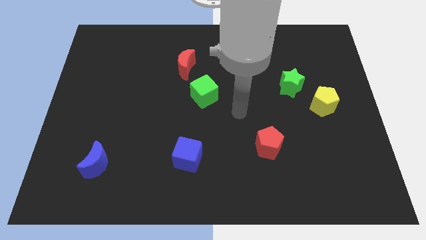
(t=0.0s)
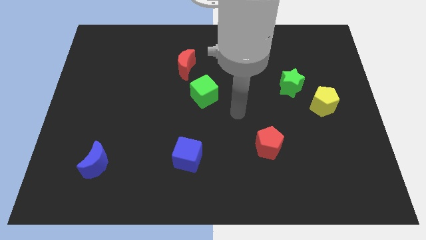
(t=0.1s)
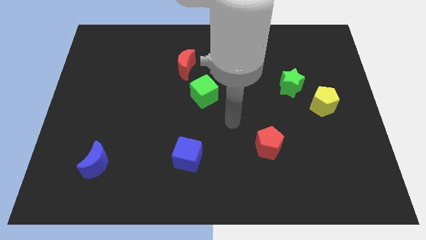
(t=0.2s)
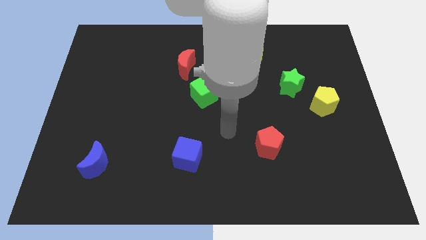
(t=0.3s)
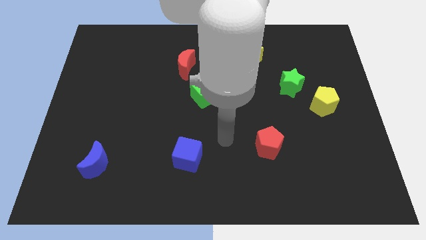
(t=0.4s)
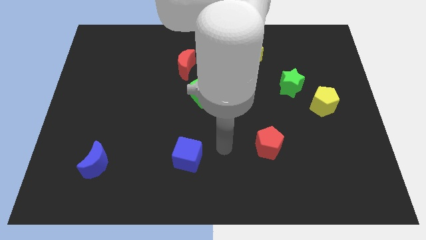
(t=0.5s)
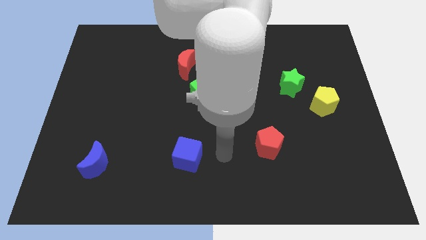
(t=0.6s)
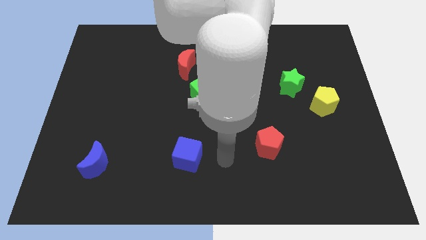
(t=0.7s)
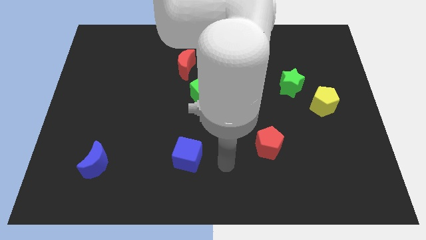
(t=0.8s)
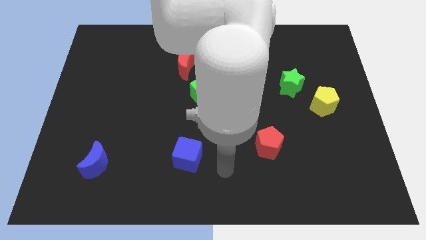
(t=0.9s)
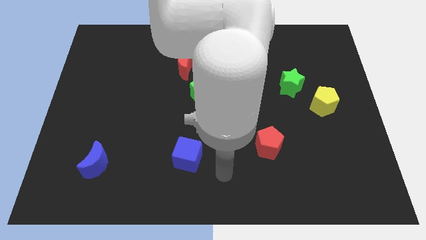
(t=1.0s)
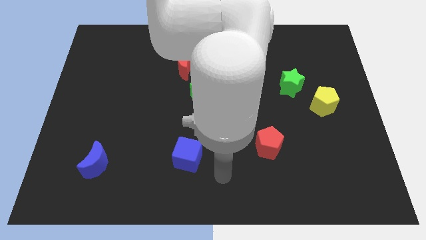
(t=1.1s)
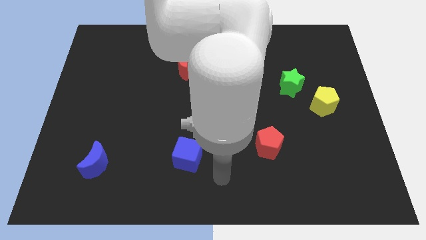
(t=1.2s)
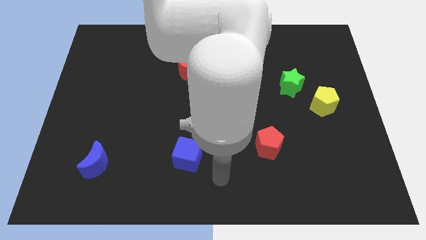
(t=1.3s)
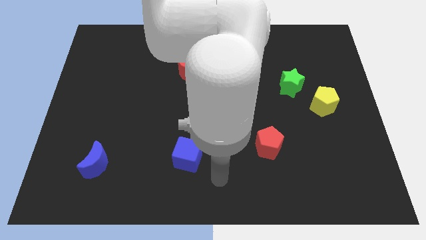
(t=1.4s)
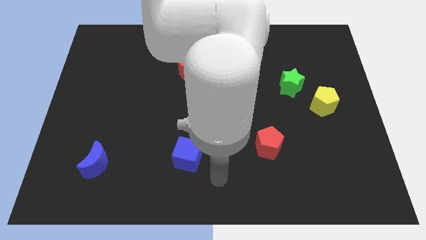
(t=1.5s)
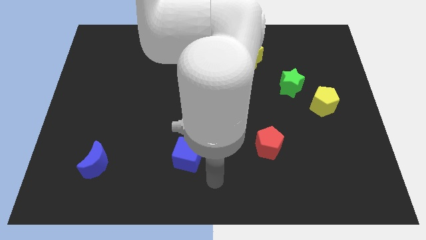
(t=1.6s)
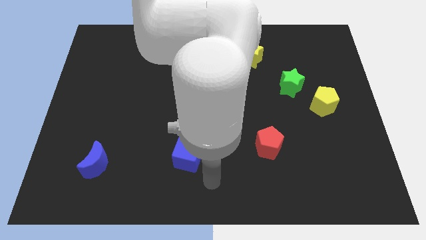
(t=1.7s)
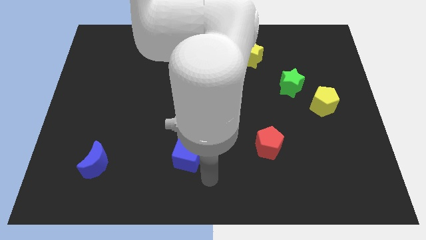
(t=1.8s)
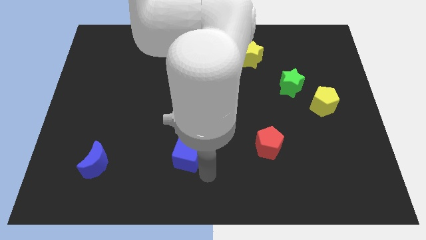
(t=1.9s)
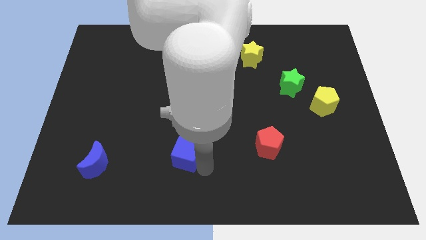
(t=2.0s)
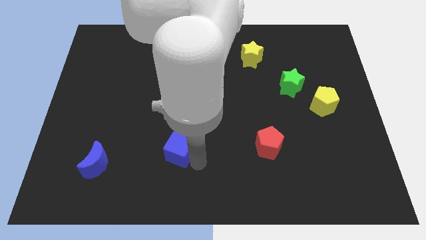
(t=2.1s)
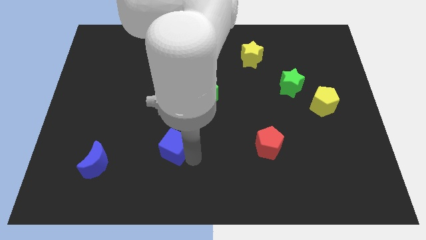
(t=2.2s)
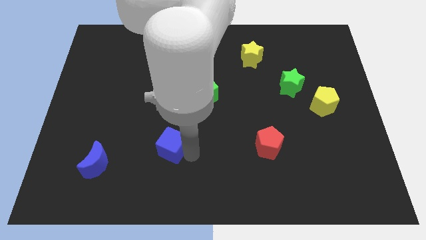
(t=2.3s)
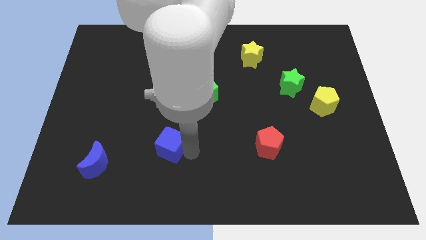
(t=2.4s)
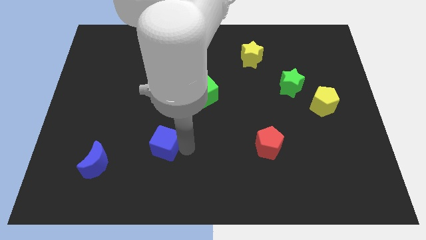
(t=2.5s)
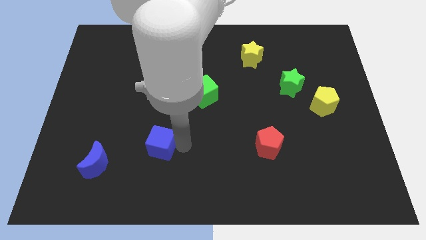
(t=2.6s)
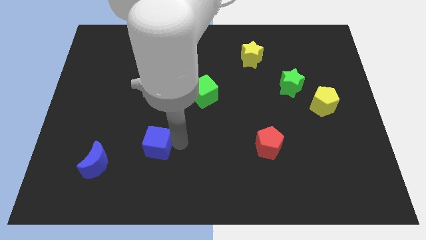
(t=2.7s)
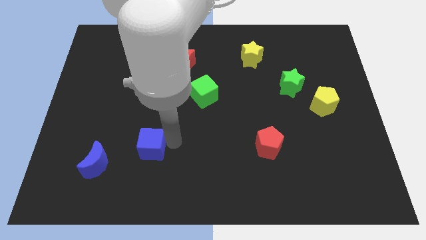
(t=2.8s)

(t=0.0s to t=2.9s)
move the blue cube to the left of the board

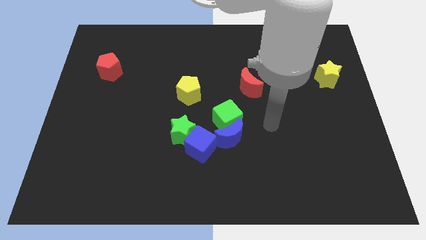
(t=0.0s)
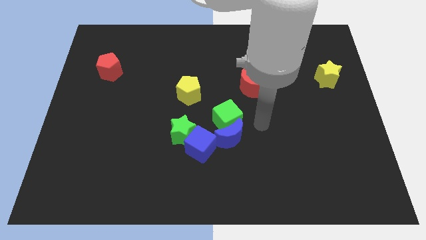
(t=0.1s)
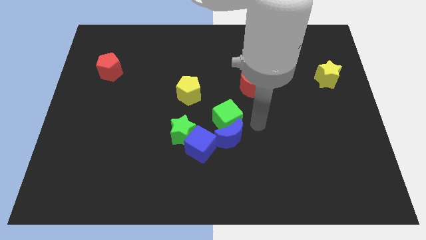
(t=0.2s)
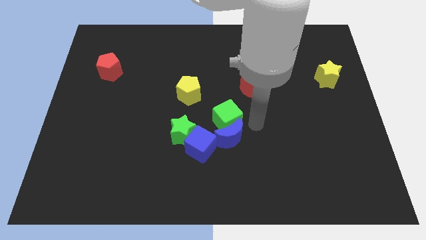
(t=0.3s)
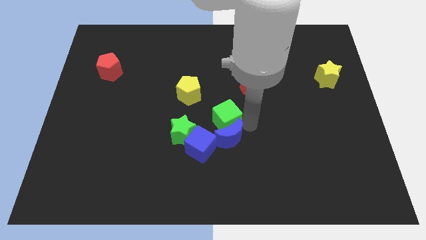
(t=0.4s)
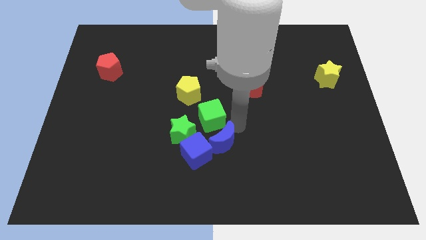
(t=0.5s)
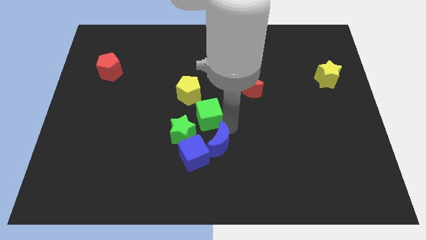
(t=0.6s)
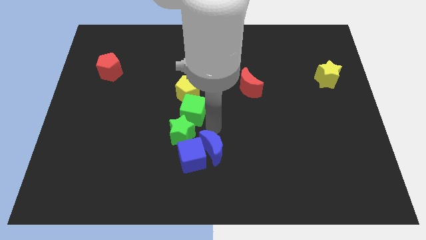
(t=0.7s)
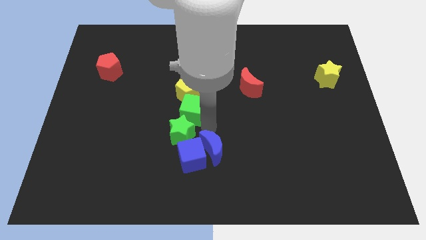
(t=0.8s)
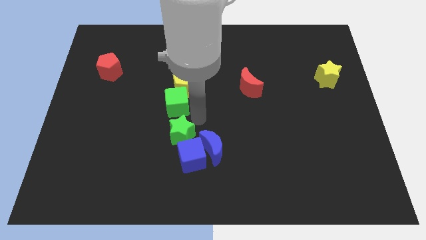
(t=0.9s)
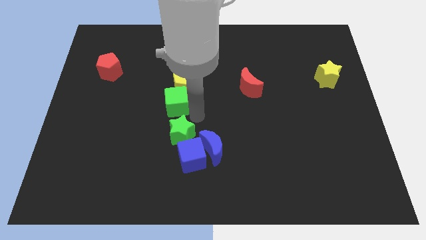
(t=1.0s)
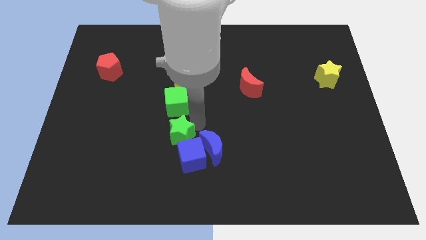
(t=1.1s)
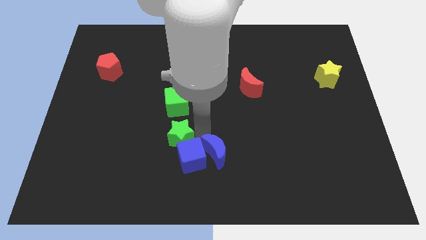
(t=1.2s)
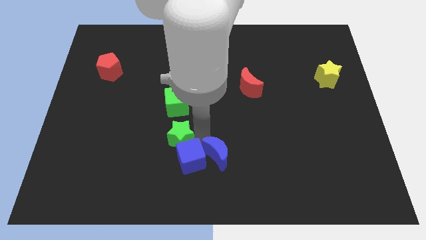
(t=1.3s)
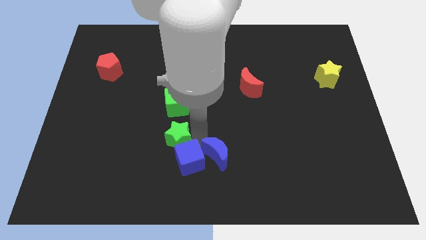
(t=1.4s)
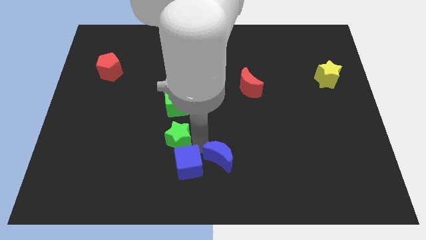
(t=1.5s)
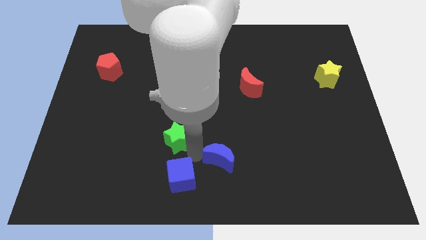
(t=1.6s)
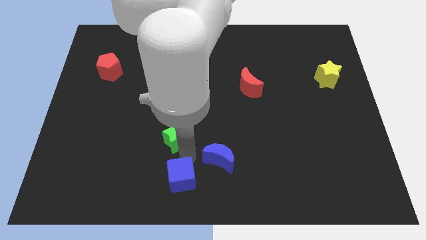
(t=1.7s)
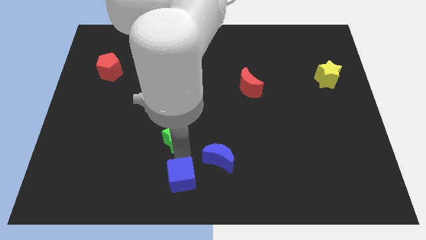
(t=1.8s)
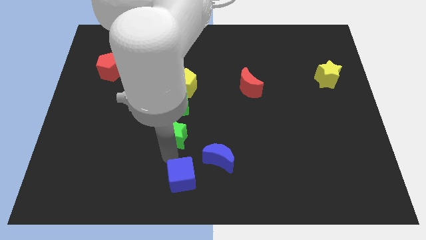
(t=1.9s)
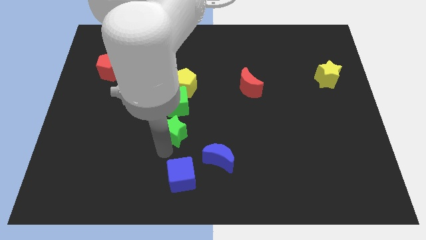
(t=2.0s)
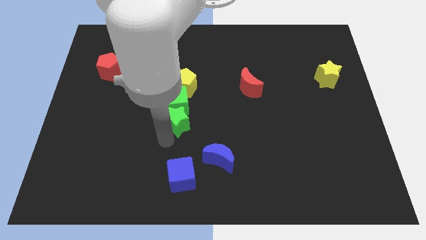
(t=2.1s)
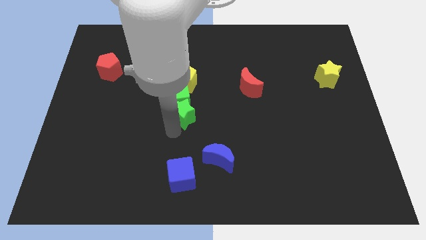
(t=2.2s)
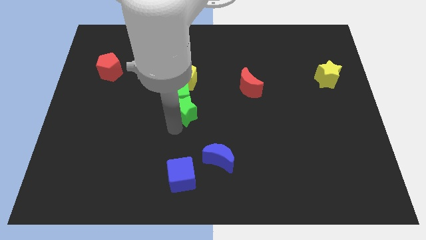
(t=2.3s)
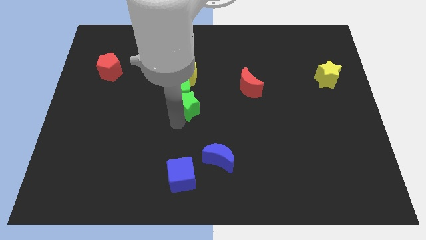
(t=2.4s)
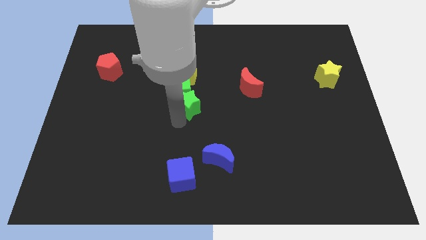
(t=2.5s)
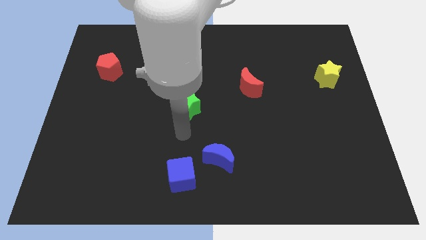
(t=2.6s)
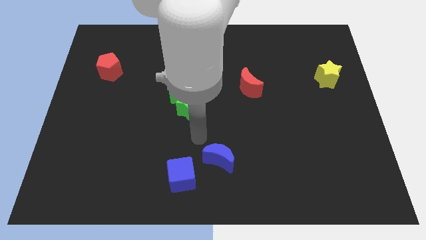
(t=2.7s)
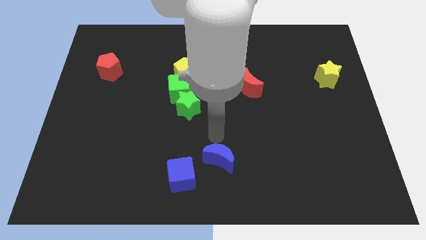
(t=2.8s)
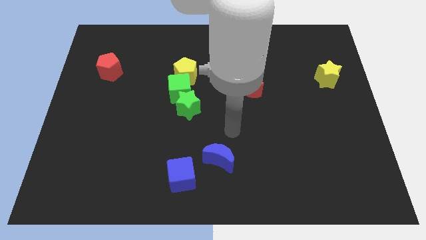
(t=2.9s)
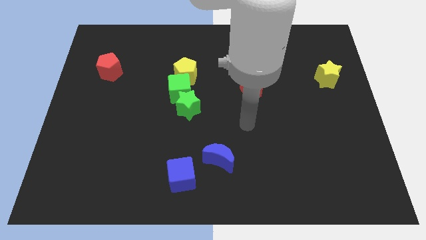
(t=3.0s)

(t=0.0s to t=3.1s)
separate green blocks and blue blocks

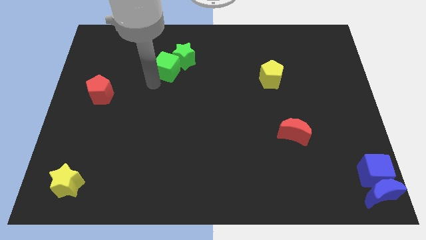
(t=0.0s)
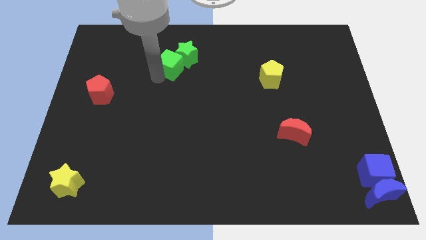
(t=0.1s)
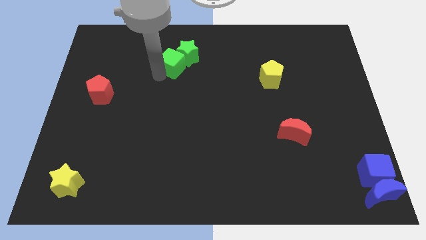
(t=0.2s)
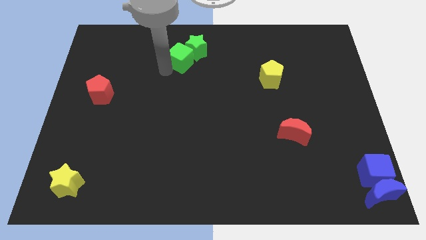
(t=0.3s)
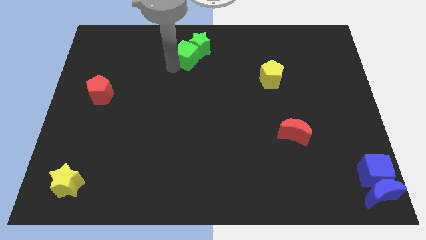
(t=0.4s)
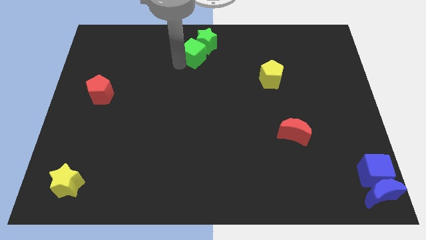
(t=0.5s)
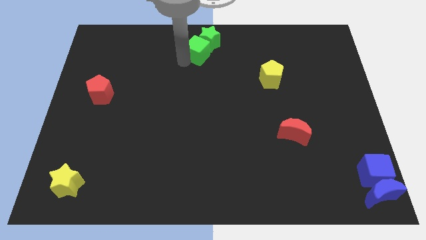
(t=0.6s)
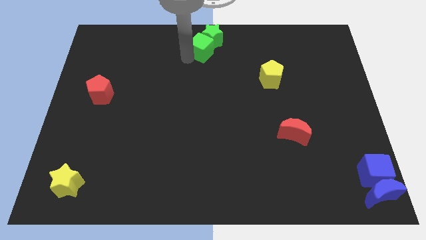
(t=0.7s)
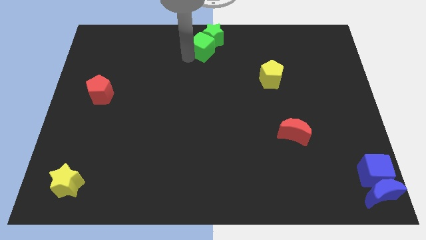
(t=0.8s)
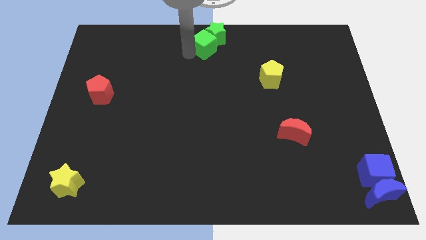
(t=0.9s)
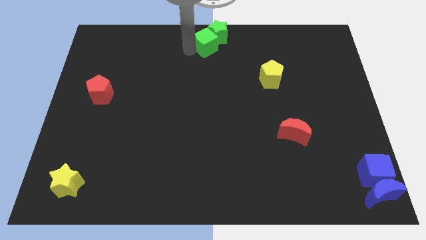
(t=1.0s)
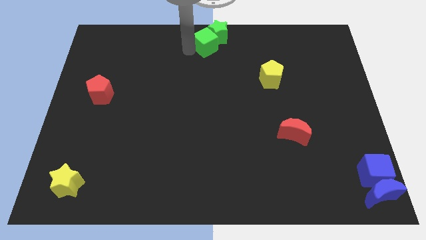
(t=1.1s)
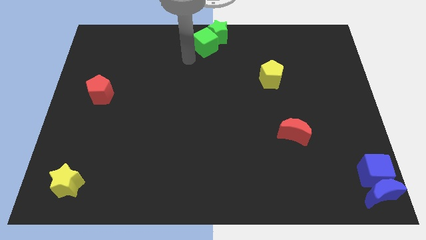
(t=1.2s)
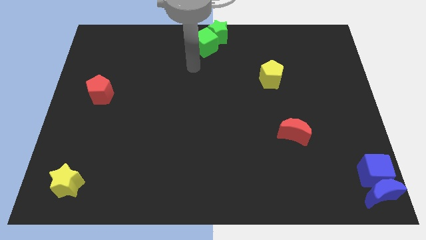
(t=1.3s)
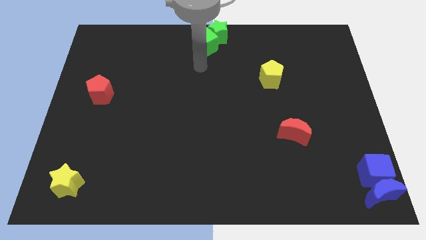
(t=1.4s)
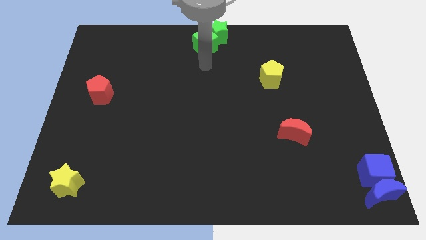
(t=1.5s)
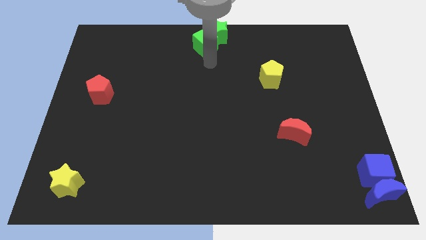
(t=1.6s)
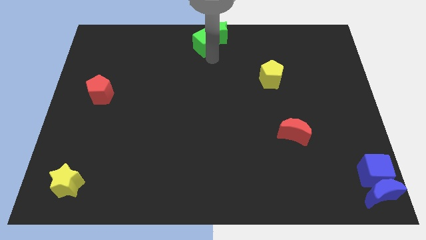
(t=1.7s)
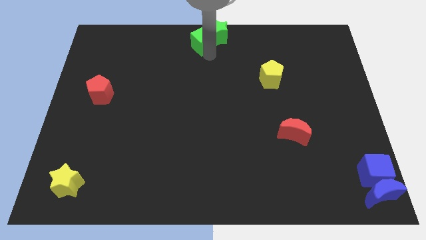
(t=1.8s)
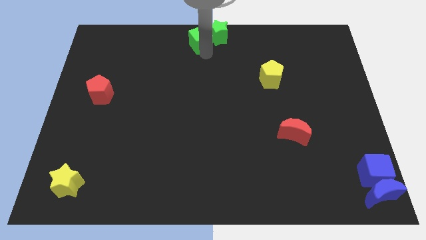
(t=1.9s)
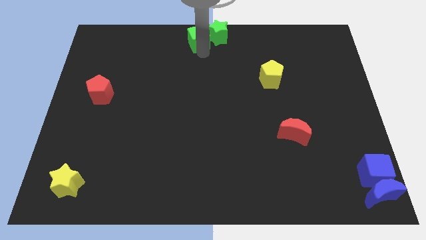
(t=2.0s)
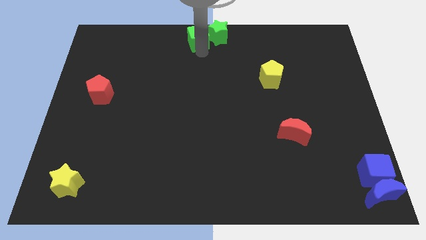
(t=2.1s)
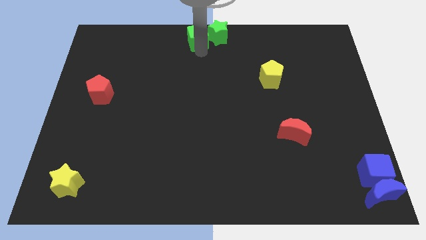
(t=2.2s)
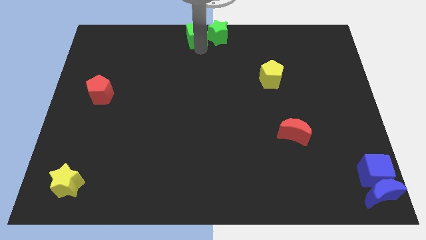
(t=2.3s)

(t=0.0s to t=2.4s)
push green cube along with green star towards top center of the board

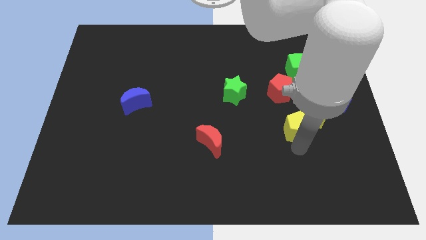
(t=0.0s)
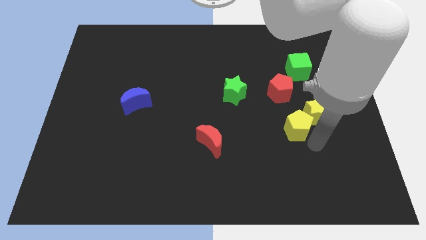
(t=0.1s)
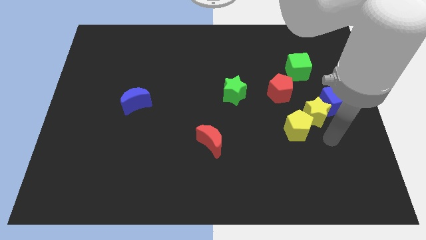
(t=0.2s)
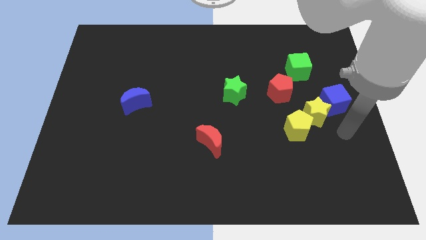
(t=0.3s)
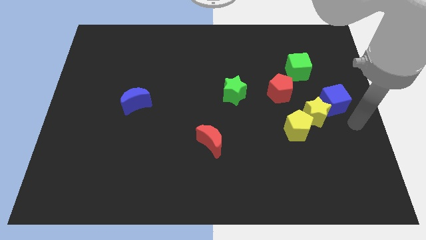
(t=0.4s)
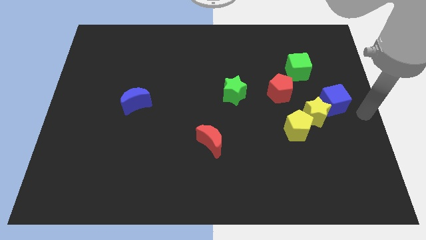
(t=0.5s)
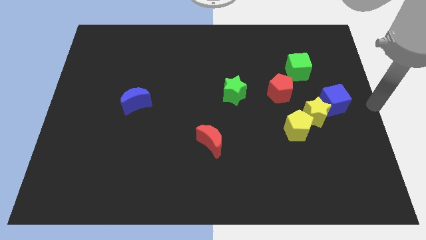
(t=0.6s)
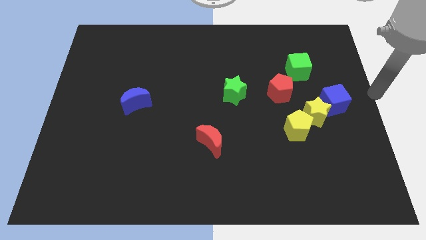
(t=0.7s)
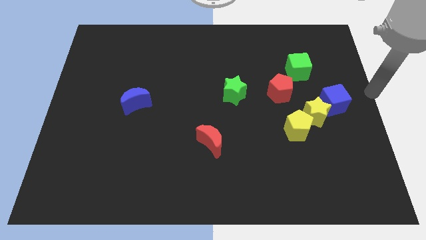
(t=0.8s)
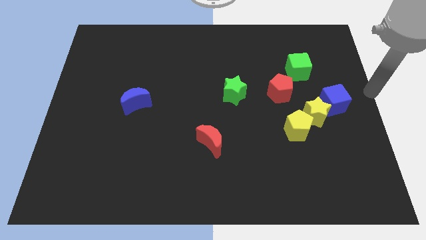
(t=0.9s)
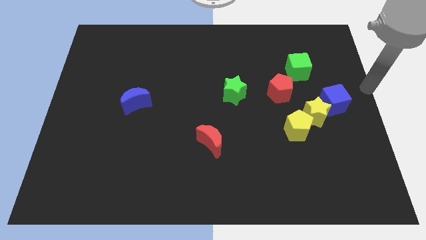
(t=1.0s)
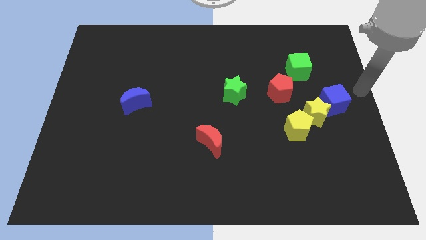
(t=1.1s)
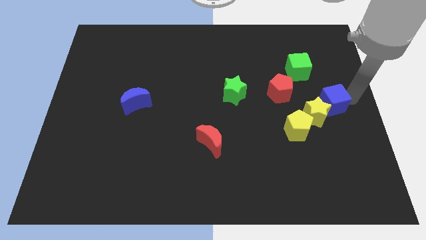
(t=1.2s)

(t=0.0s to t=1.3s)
place the arm at the right side of the blue cube
